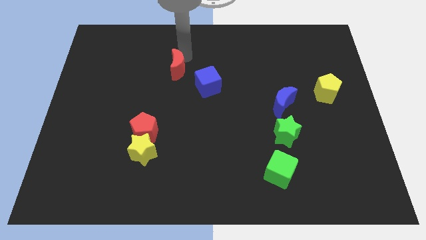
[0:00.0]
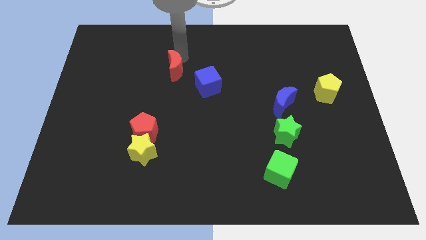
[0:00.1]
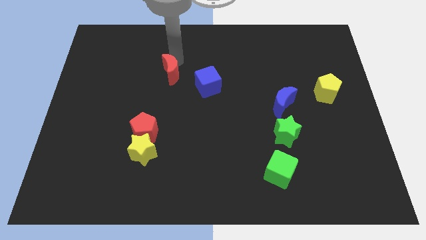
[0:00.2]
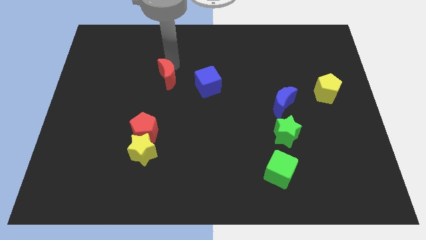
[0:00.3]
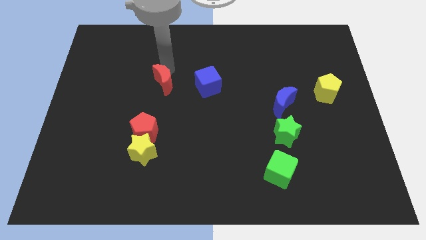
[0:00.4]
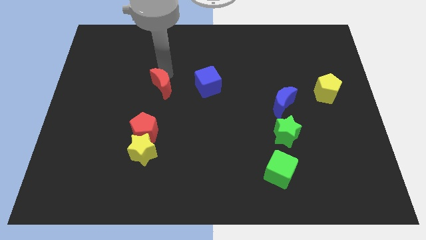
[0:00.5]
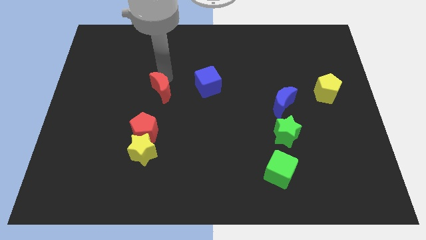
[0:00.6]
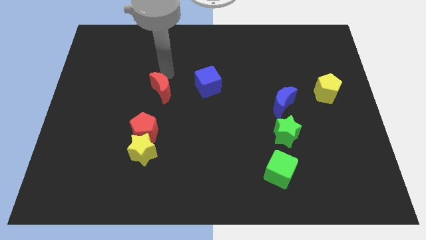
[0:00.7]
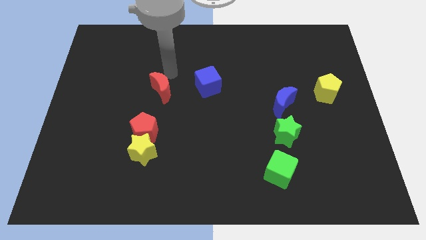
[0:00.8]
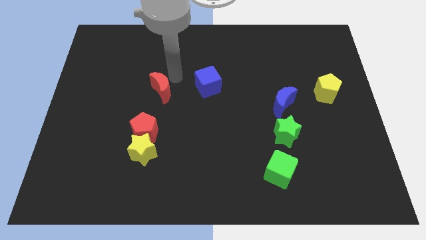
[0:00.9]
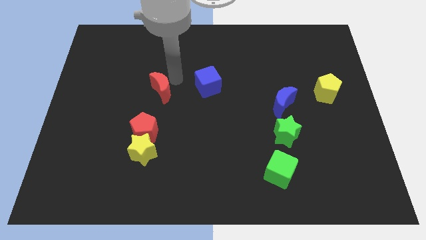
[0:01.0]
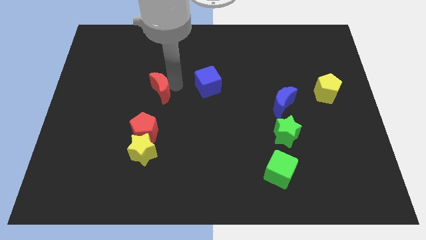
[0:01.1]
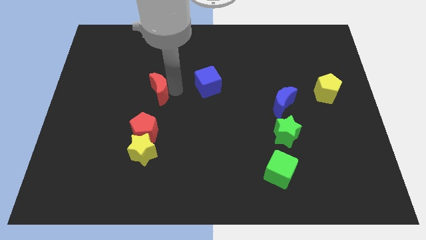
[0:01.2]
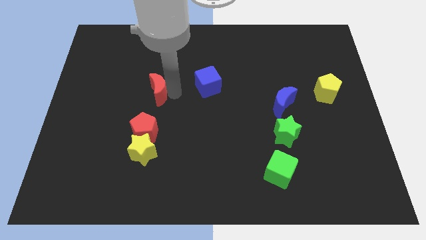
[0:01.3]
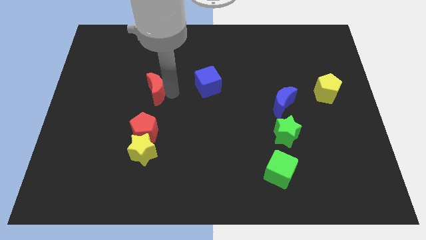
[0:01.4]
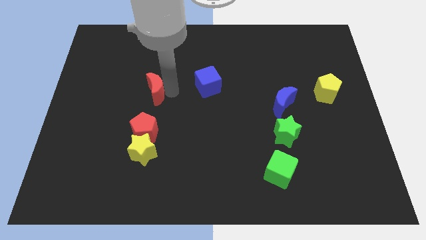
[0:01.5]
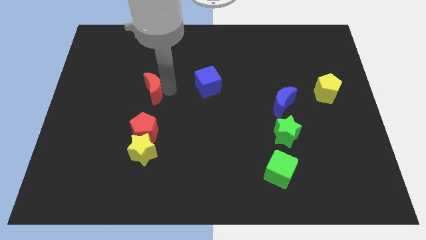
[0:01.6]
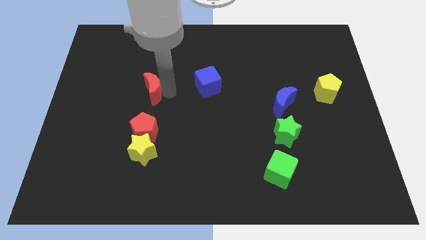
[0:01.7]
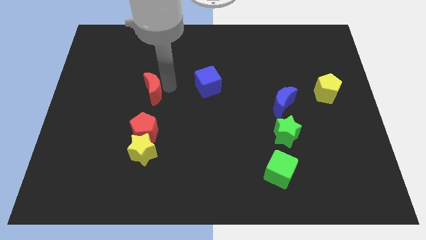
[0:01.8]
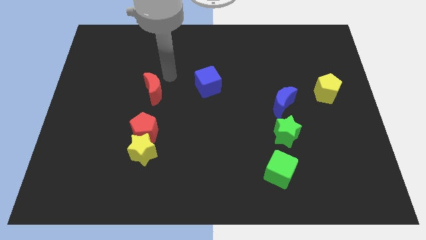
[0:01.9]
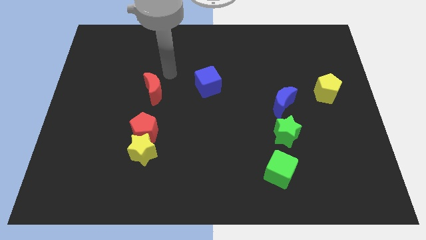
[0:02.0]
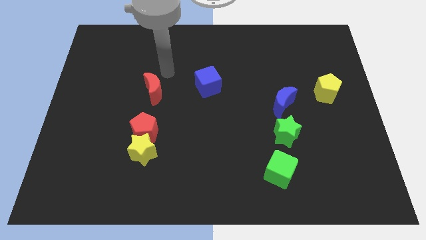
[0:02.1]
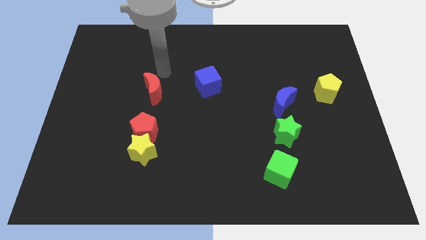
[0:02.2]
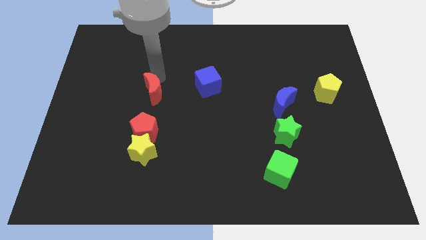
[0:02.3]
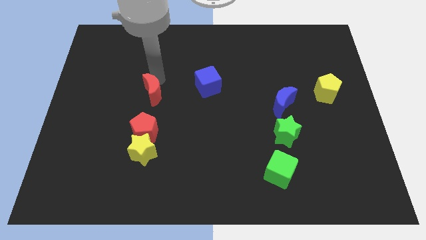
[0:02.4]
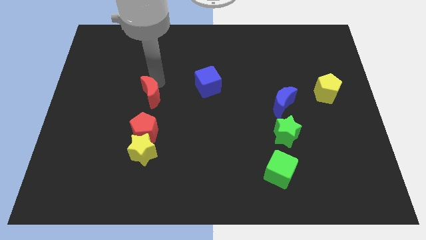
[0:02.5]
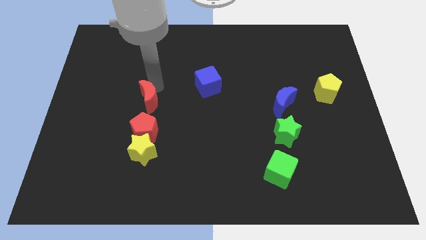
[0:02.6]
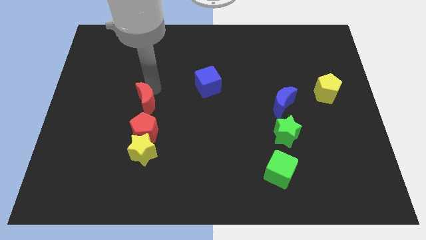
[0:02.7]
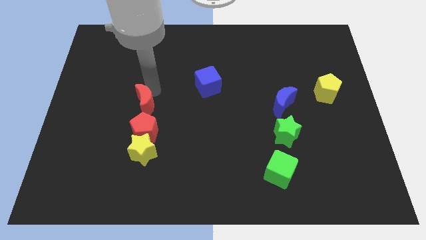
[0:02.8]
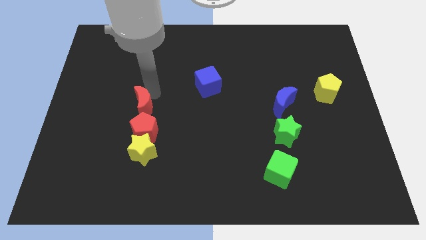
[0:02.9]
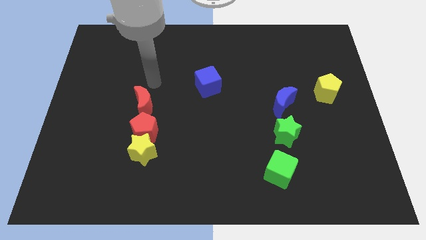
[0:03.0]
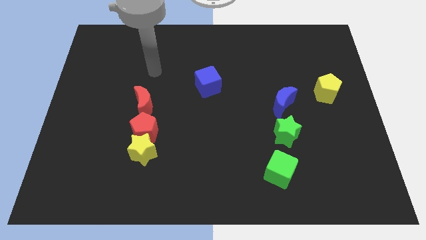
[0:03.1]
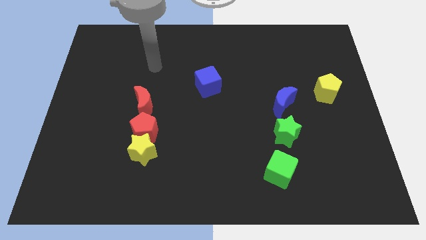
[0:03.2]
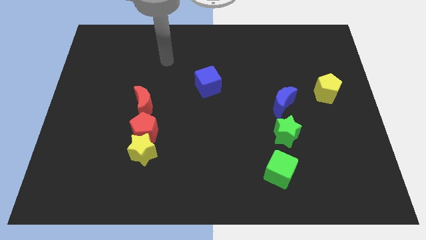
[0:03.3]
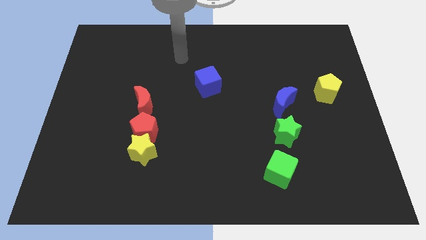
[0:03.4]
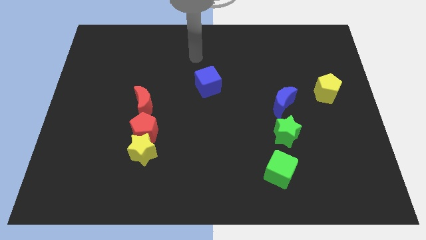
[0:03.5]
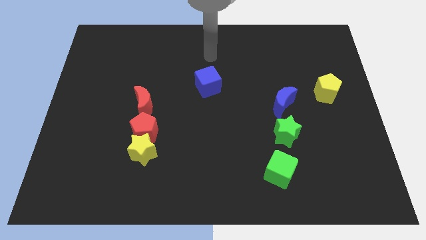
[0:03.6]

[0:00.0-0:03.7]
move the red crescent above to the red pentagon

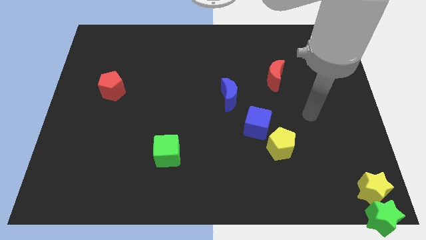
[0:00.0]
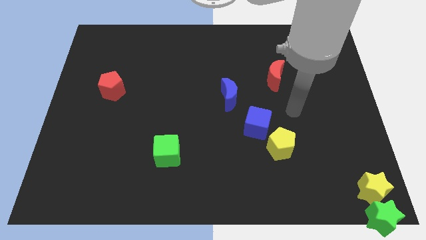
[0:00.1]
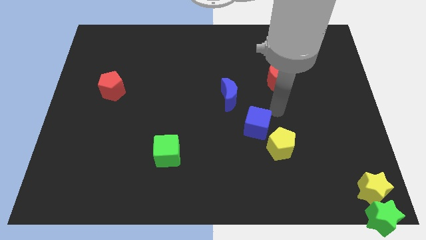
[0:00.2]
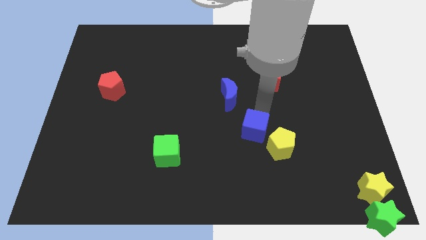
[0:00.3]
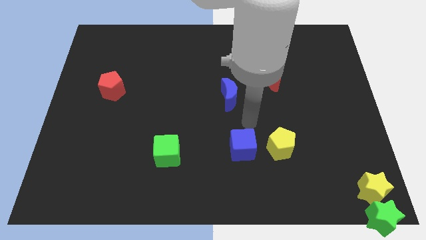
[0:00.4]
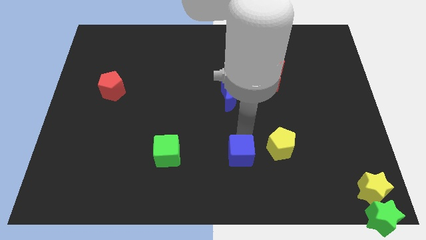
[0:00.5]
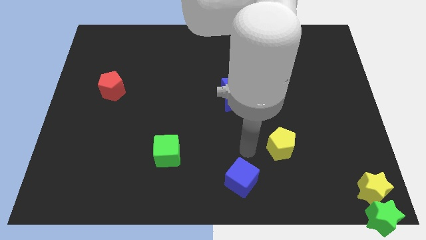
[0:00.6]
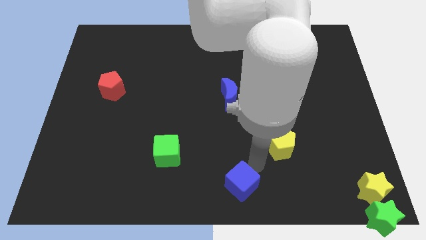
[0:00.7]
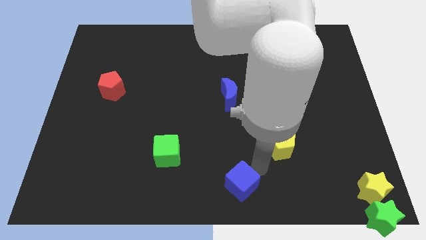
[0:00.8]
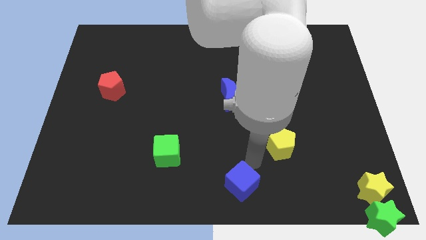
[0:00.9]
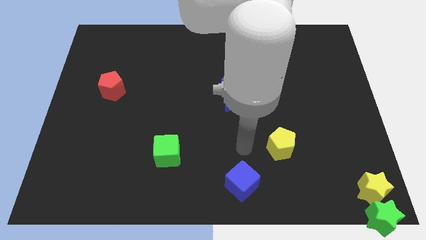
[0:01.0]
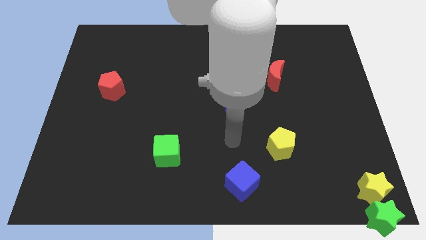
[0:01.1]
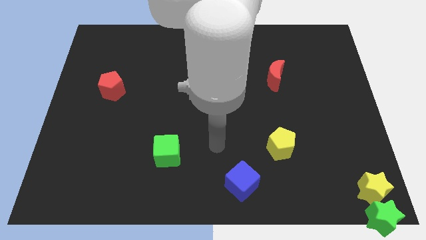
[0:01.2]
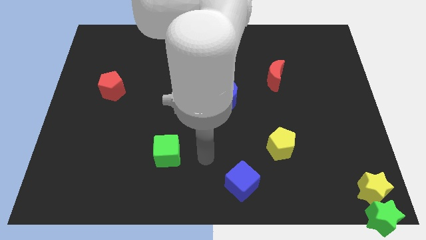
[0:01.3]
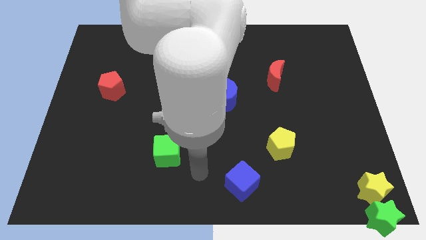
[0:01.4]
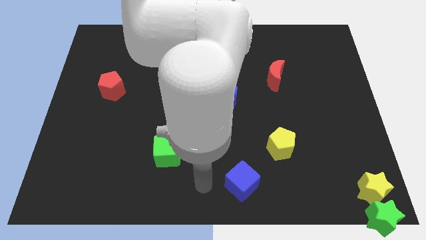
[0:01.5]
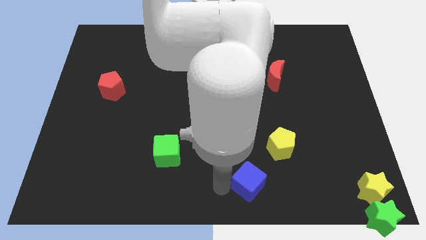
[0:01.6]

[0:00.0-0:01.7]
separate blue cube from yellow pentagon

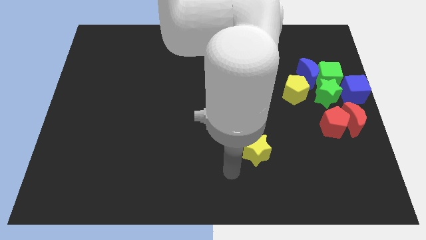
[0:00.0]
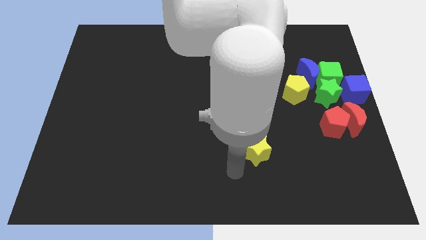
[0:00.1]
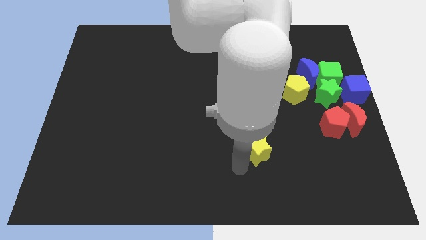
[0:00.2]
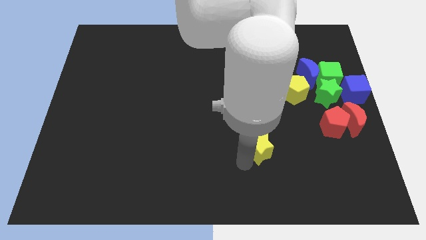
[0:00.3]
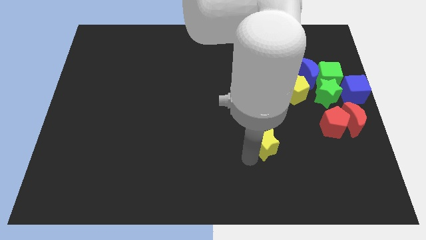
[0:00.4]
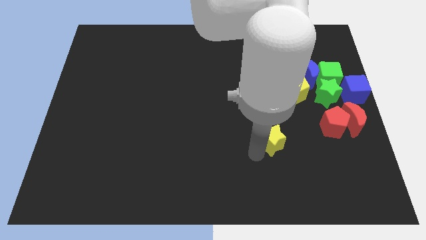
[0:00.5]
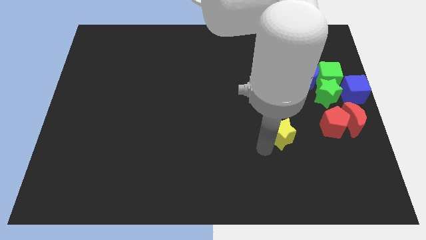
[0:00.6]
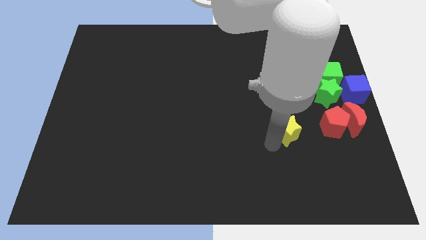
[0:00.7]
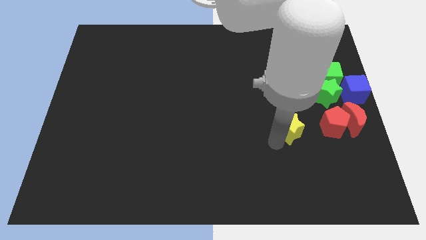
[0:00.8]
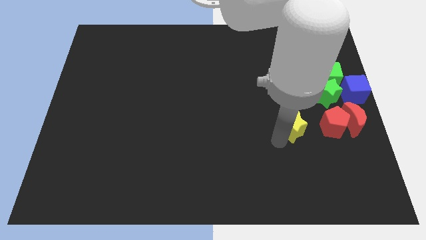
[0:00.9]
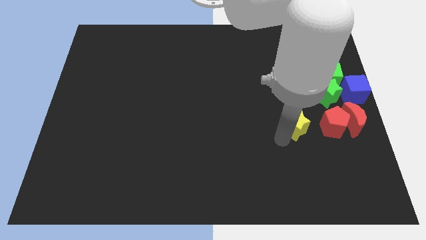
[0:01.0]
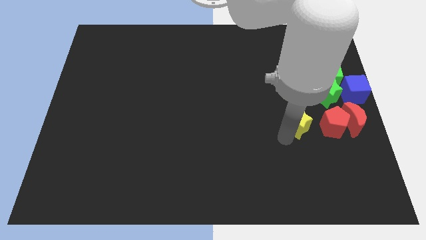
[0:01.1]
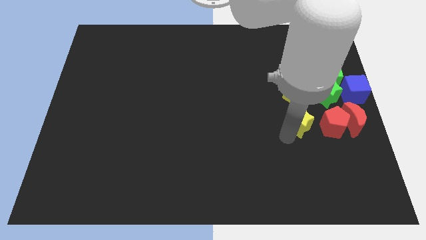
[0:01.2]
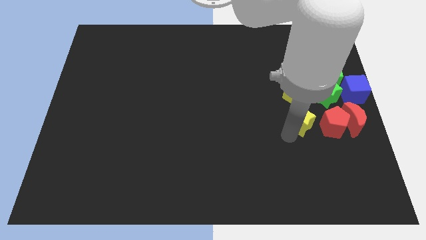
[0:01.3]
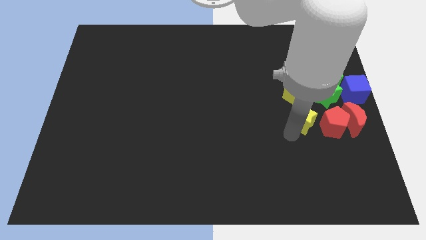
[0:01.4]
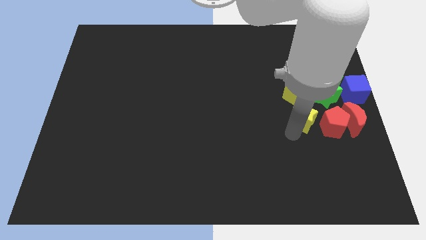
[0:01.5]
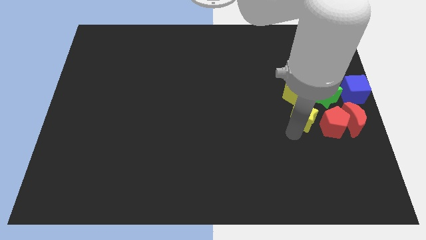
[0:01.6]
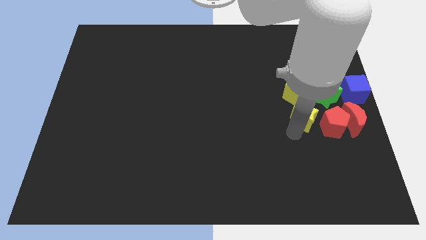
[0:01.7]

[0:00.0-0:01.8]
add the yellow star to the group of blocks at the left center of the board

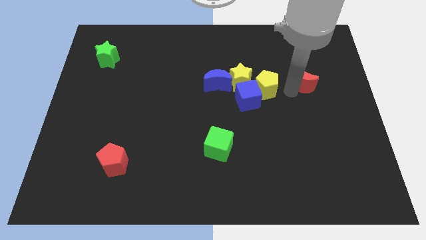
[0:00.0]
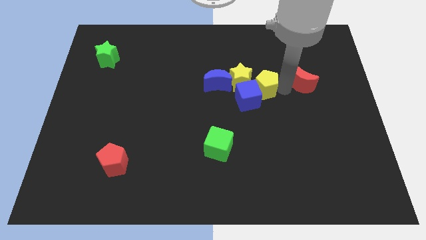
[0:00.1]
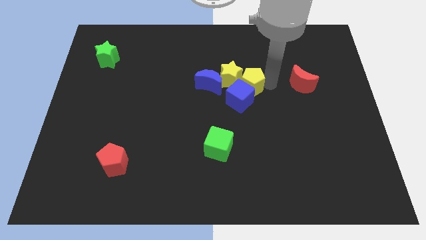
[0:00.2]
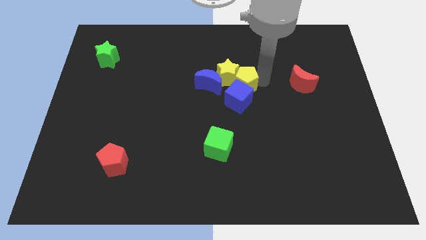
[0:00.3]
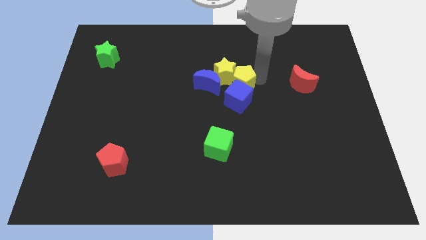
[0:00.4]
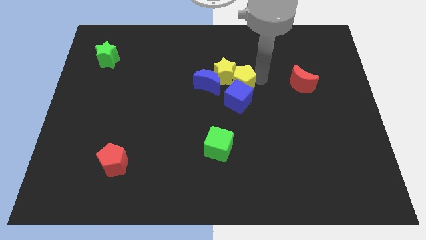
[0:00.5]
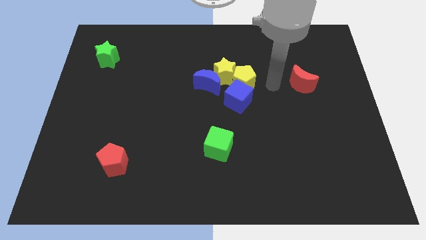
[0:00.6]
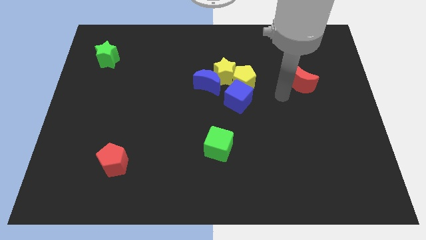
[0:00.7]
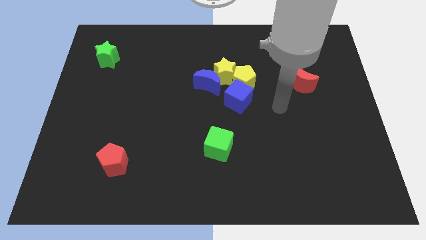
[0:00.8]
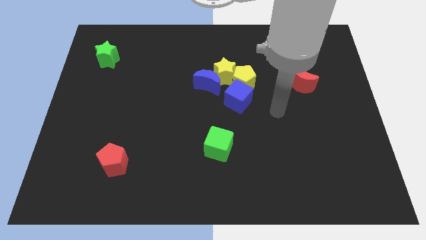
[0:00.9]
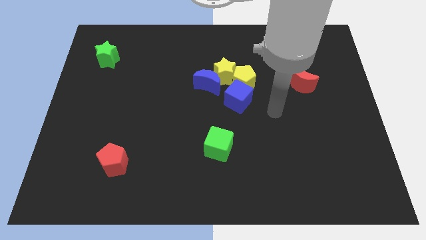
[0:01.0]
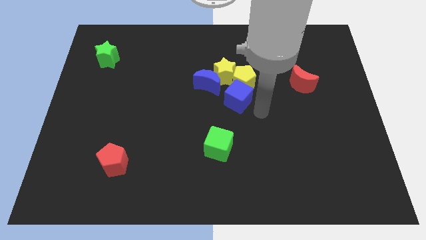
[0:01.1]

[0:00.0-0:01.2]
push the yellow pentagon into the yellow star

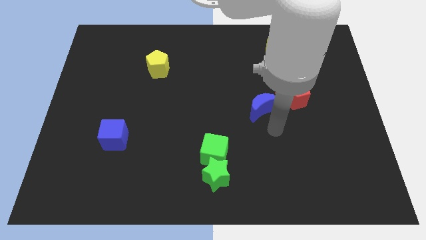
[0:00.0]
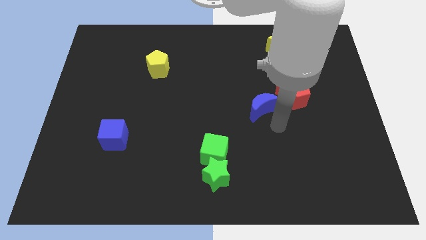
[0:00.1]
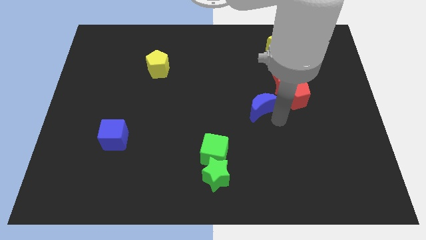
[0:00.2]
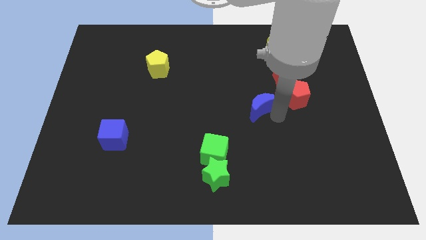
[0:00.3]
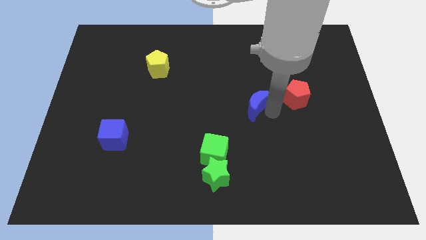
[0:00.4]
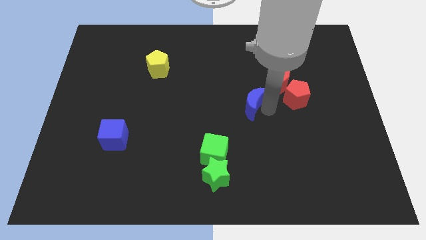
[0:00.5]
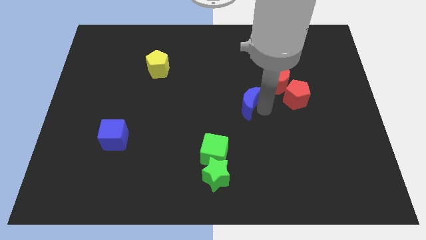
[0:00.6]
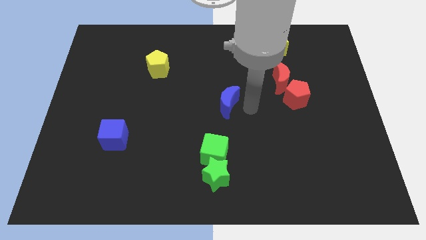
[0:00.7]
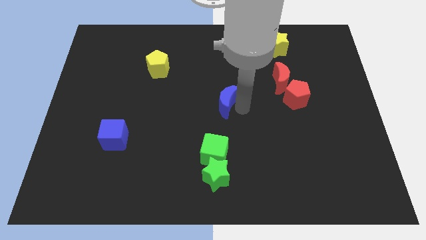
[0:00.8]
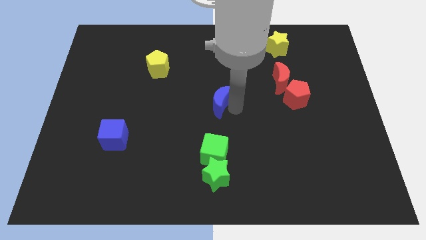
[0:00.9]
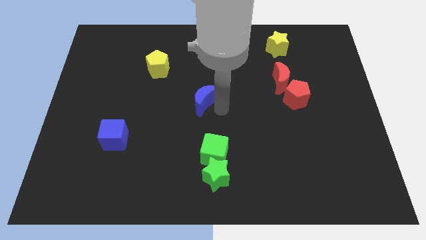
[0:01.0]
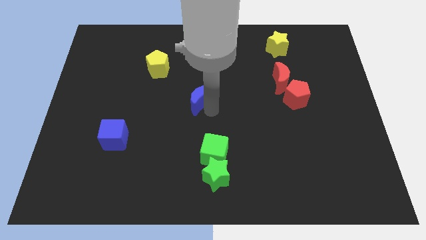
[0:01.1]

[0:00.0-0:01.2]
push the blue moon to the left side of the board
